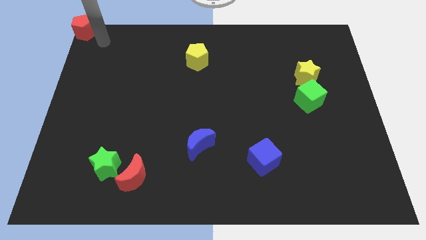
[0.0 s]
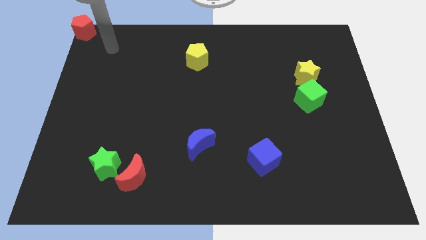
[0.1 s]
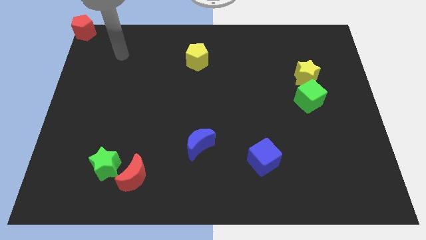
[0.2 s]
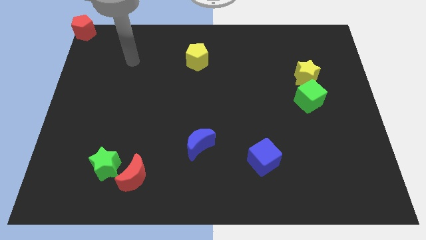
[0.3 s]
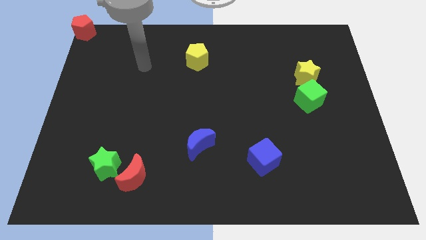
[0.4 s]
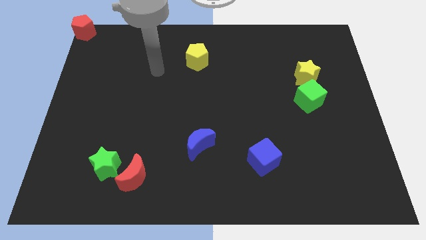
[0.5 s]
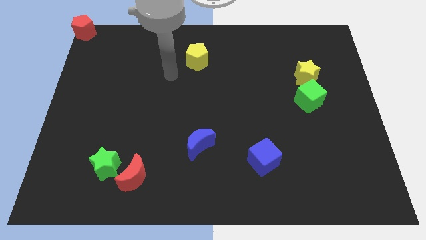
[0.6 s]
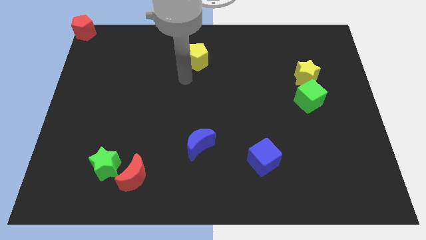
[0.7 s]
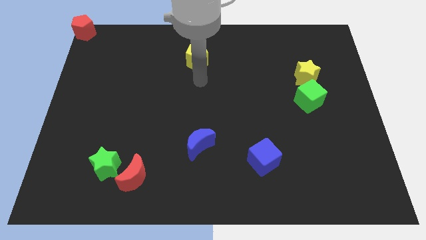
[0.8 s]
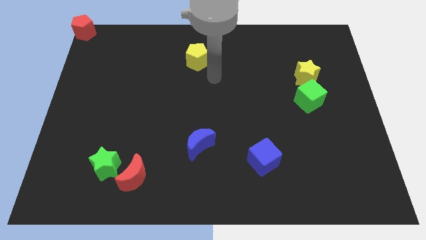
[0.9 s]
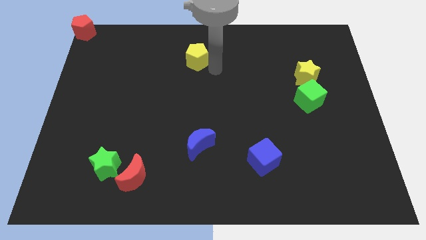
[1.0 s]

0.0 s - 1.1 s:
point your arm at the right of the yellow pentagon

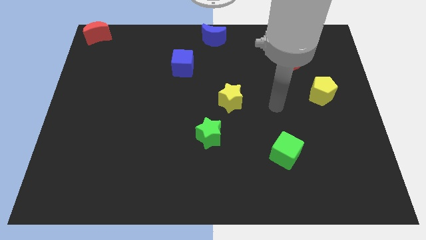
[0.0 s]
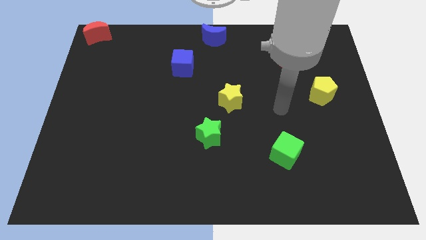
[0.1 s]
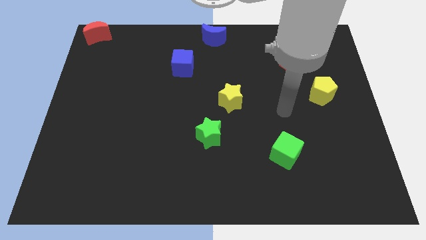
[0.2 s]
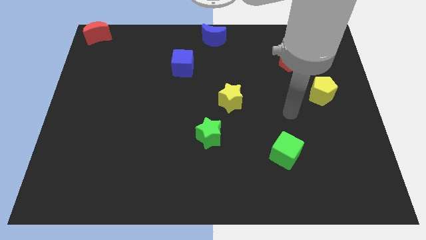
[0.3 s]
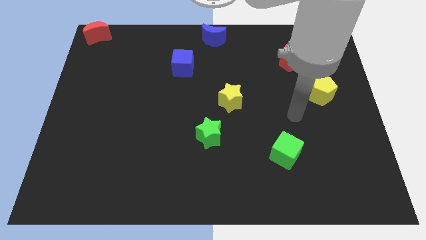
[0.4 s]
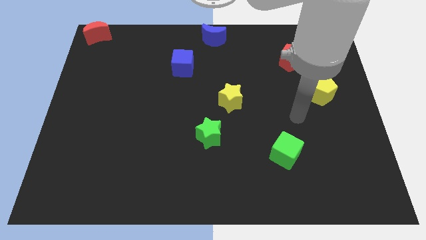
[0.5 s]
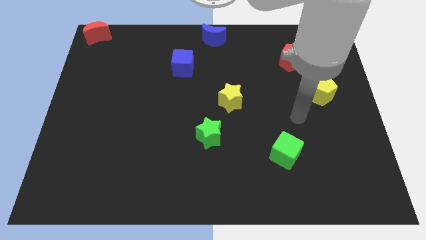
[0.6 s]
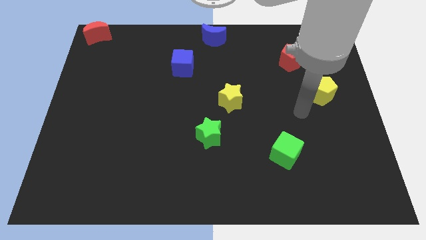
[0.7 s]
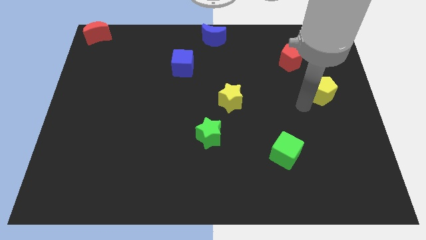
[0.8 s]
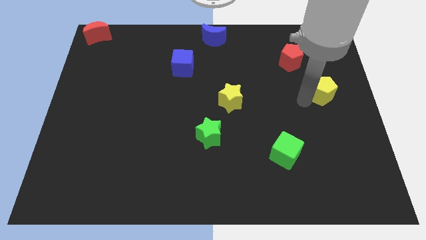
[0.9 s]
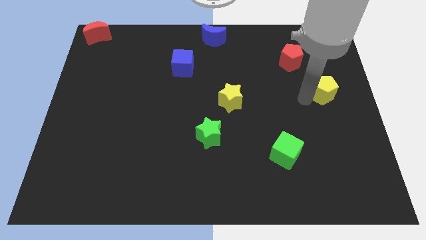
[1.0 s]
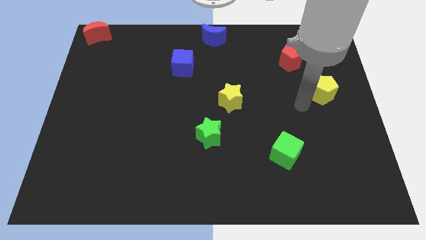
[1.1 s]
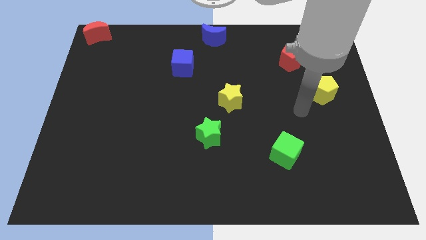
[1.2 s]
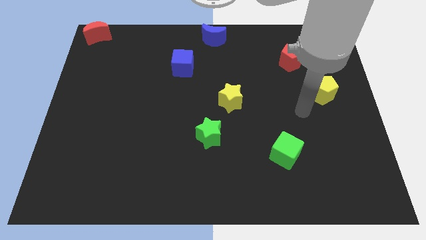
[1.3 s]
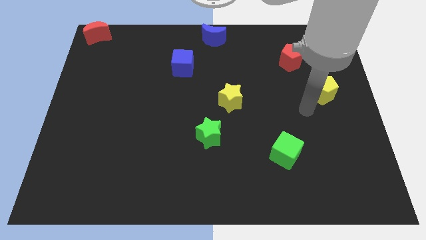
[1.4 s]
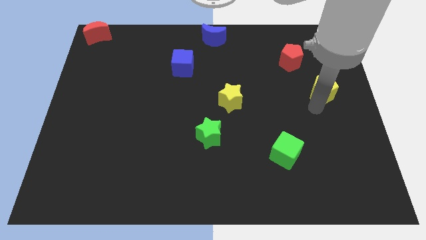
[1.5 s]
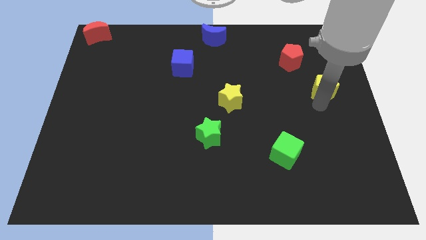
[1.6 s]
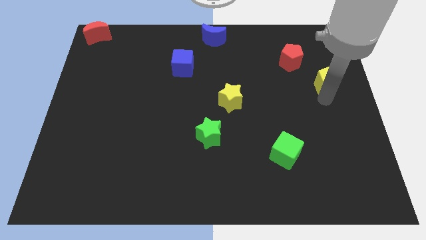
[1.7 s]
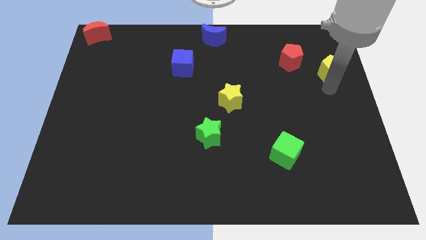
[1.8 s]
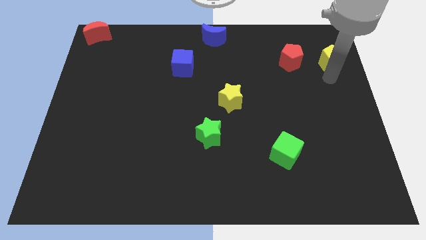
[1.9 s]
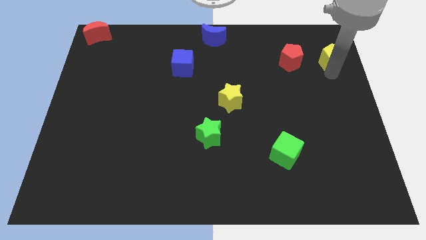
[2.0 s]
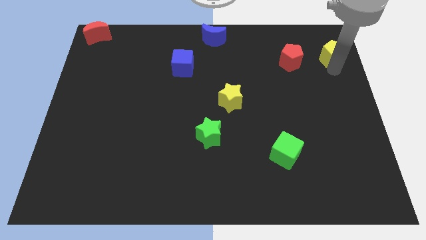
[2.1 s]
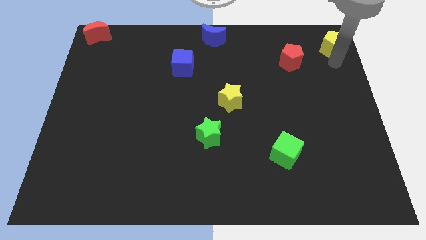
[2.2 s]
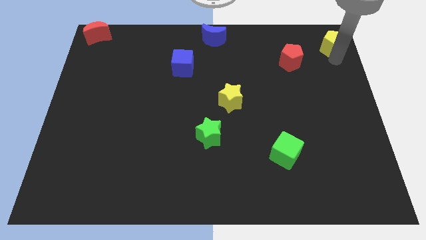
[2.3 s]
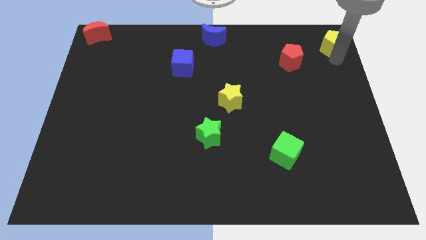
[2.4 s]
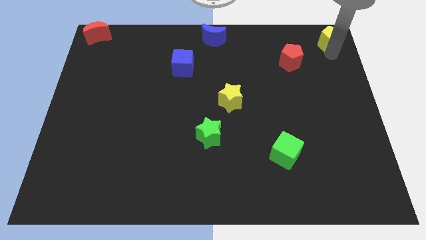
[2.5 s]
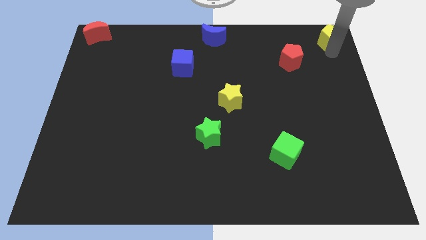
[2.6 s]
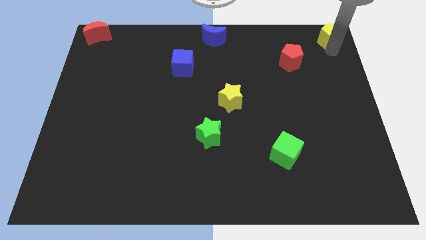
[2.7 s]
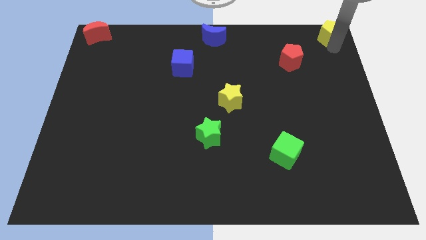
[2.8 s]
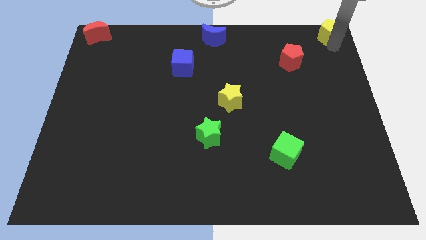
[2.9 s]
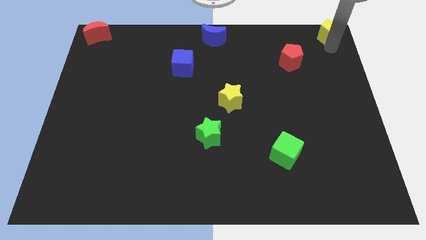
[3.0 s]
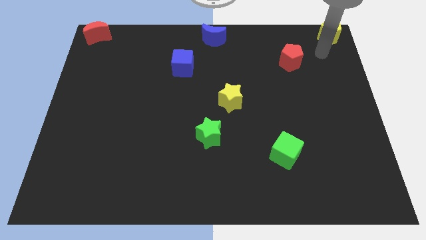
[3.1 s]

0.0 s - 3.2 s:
place the yellow pentagon to the top right corner

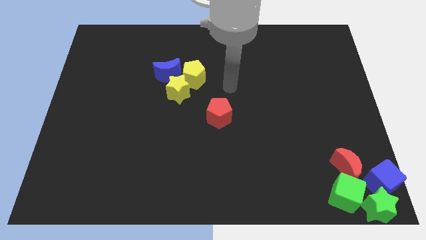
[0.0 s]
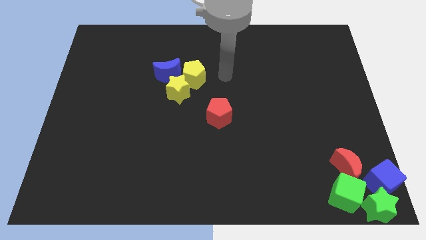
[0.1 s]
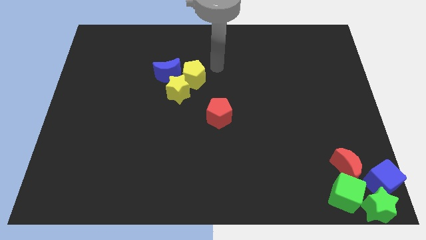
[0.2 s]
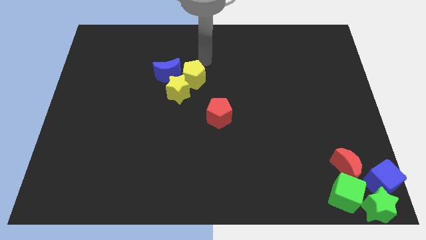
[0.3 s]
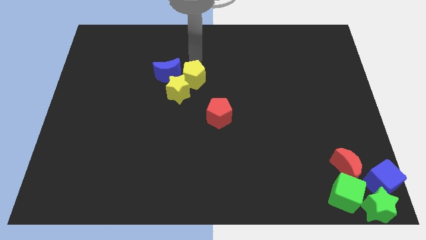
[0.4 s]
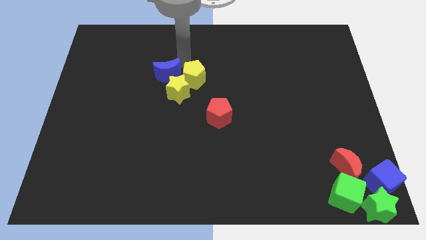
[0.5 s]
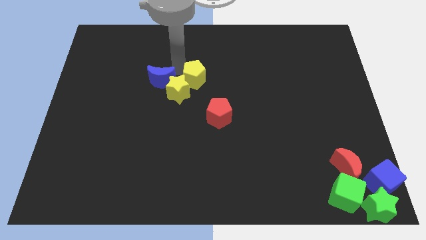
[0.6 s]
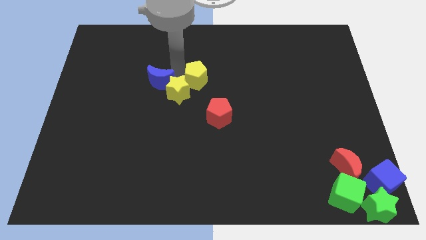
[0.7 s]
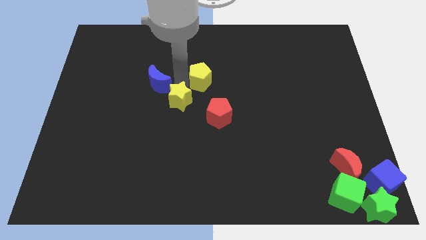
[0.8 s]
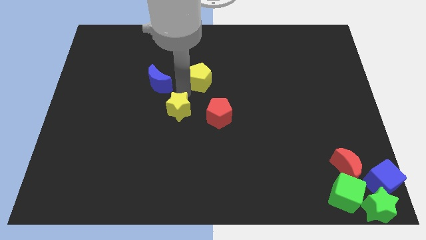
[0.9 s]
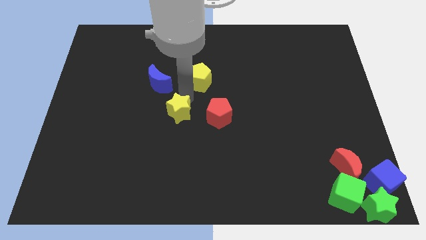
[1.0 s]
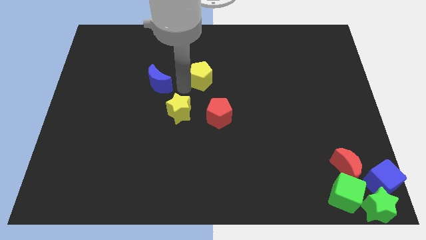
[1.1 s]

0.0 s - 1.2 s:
move the yellow star left to the red pentagon

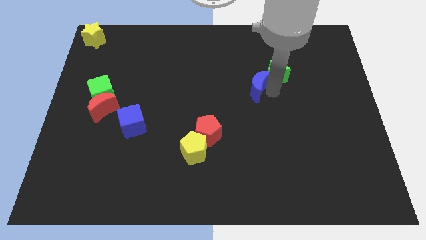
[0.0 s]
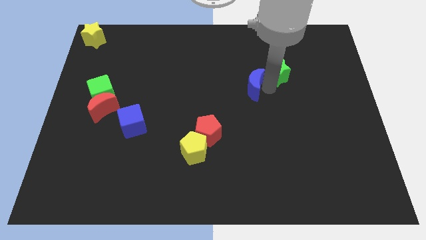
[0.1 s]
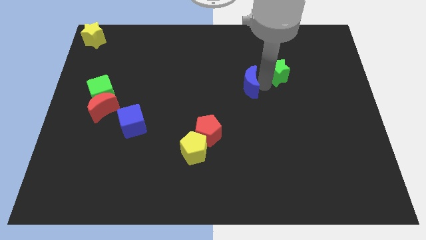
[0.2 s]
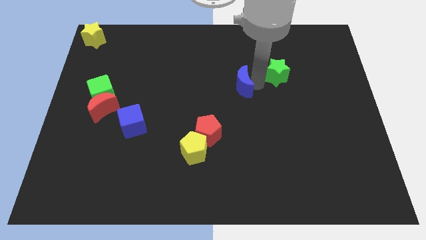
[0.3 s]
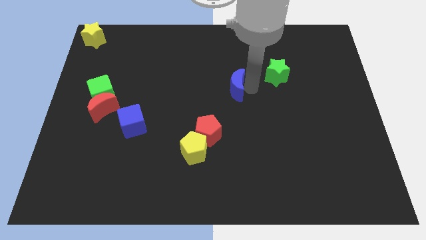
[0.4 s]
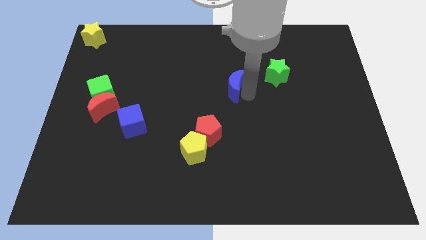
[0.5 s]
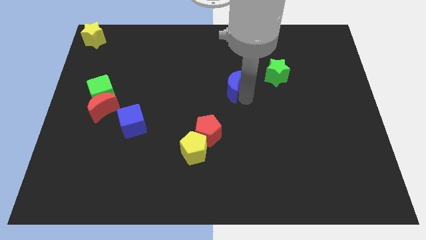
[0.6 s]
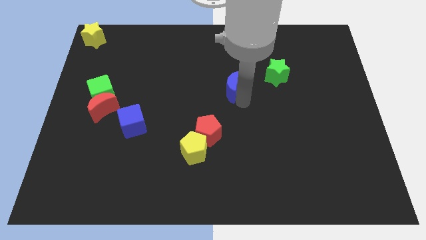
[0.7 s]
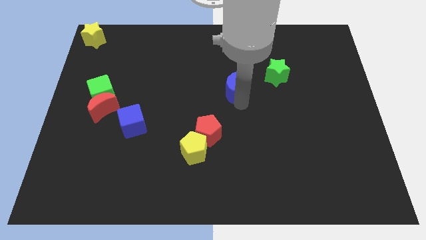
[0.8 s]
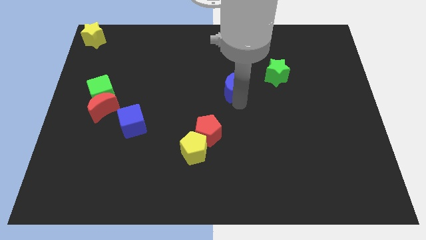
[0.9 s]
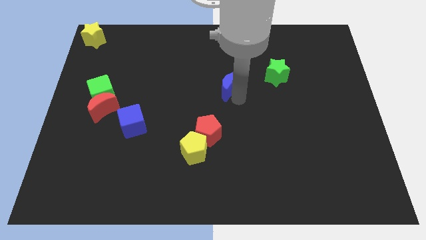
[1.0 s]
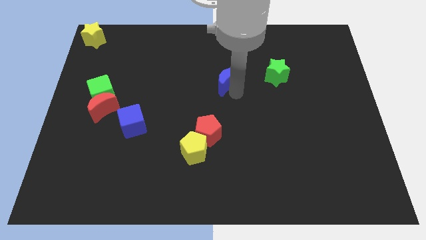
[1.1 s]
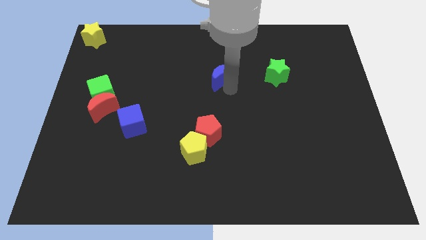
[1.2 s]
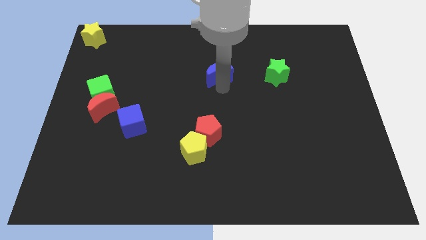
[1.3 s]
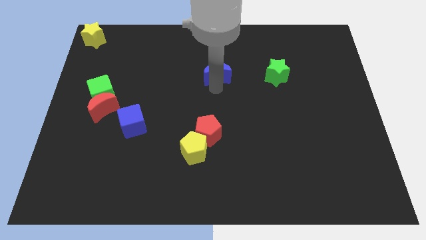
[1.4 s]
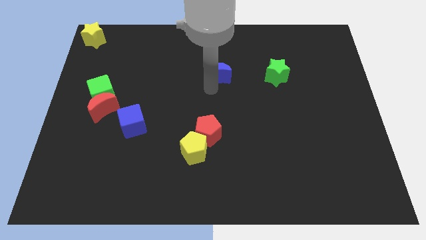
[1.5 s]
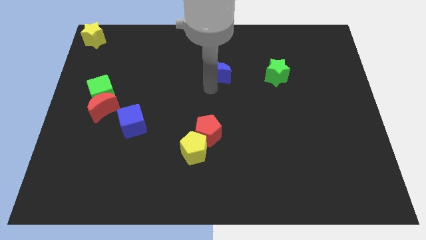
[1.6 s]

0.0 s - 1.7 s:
separate the blue crescent from the green star

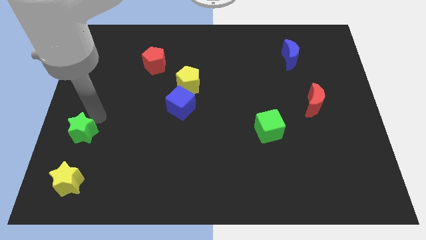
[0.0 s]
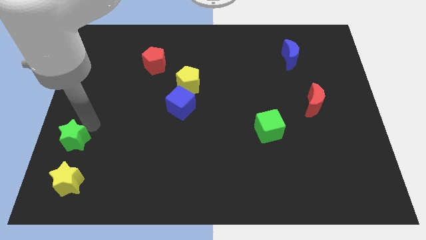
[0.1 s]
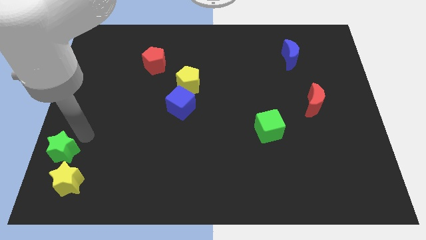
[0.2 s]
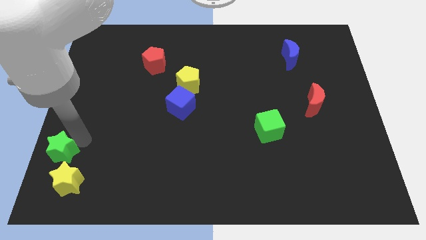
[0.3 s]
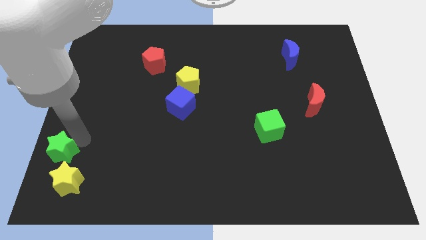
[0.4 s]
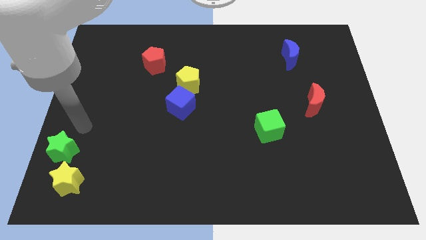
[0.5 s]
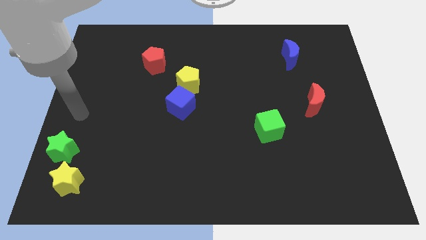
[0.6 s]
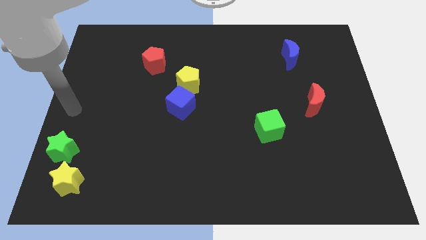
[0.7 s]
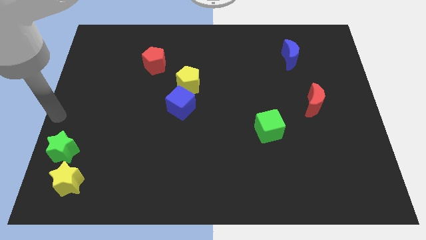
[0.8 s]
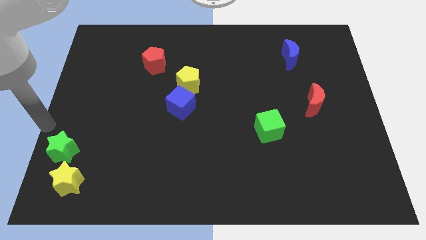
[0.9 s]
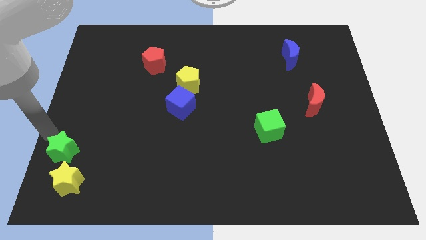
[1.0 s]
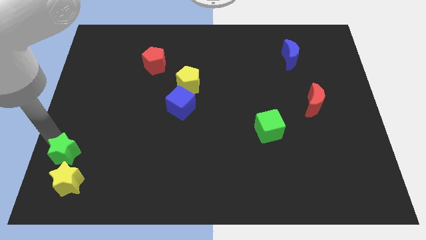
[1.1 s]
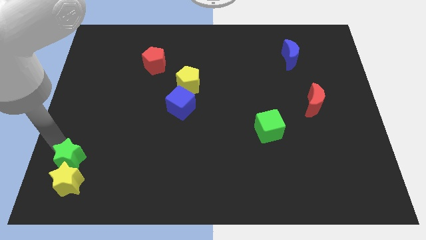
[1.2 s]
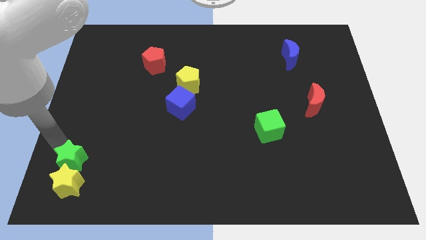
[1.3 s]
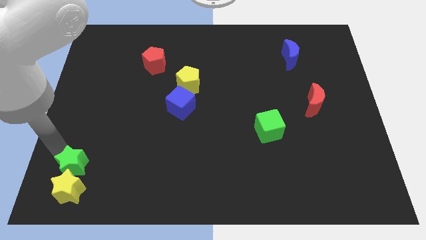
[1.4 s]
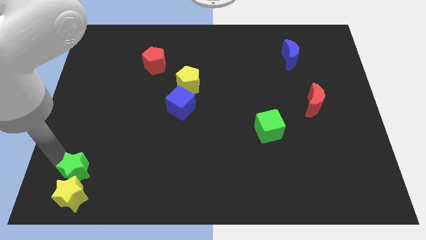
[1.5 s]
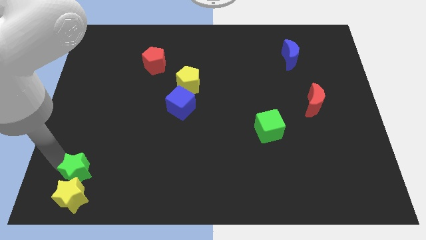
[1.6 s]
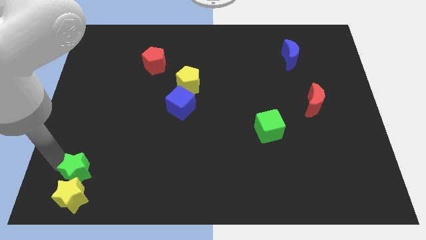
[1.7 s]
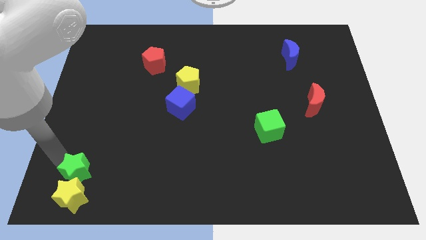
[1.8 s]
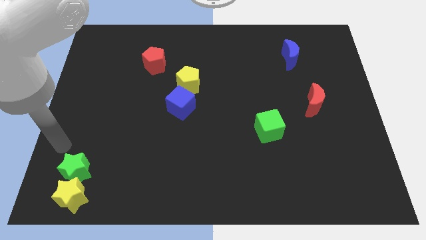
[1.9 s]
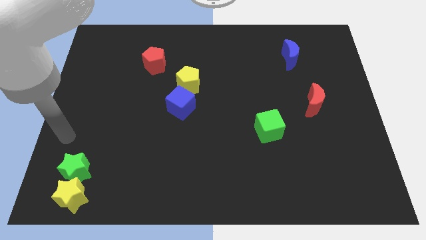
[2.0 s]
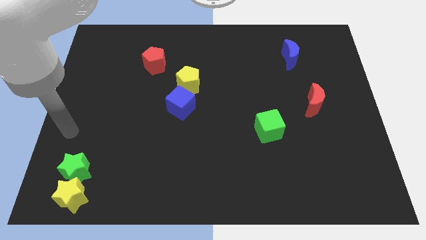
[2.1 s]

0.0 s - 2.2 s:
slide green star into yellow star
